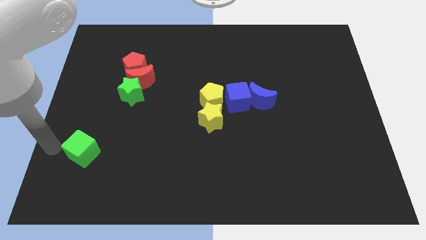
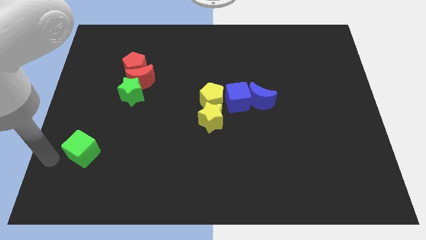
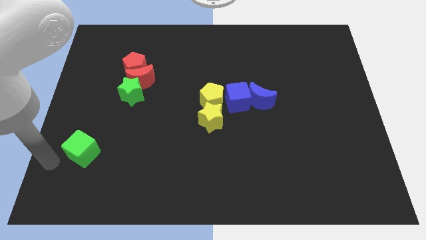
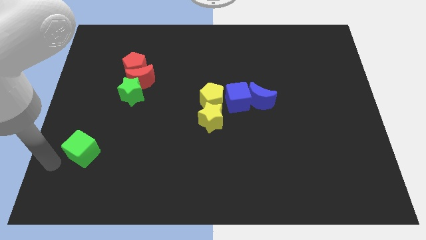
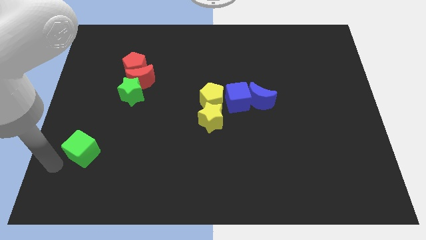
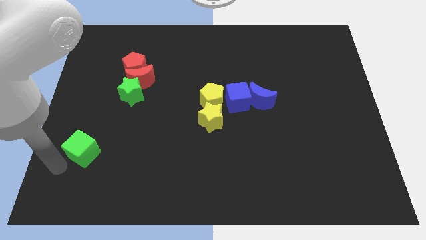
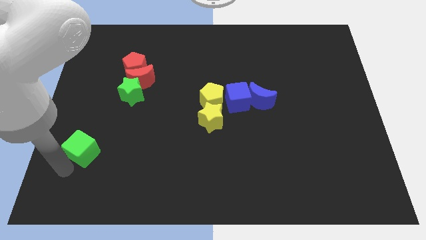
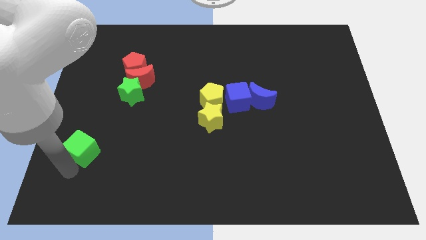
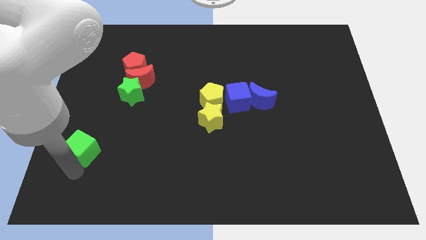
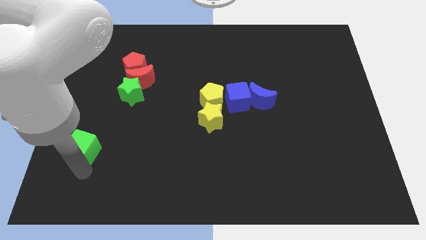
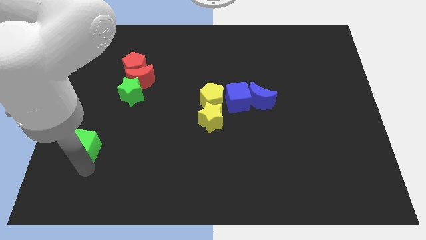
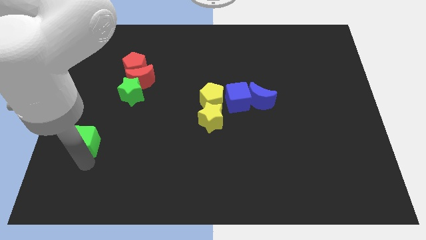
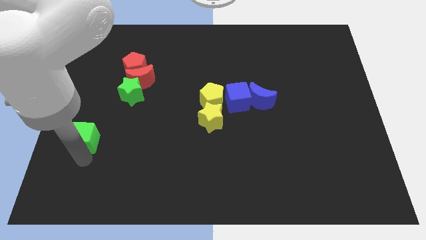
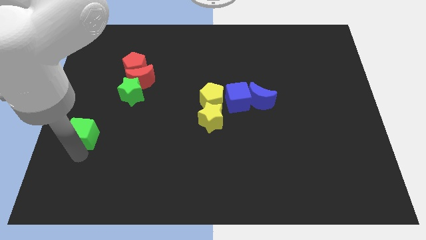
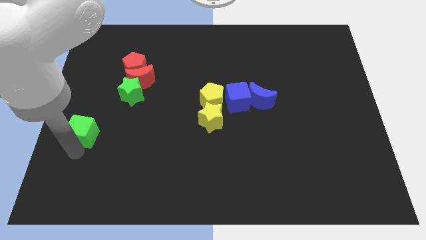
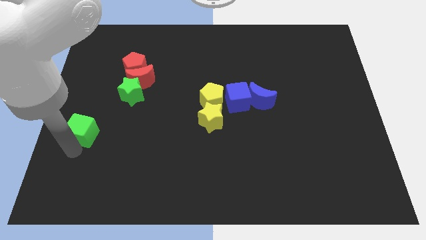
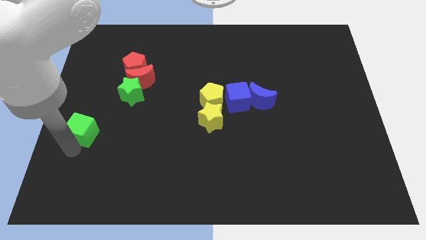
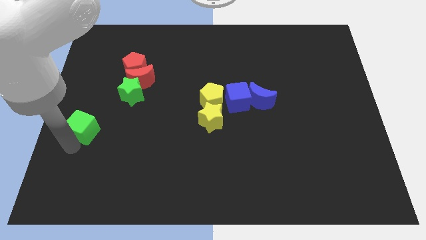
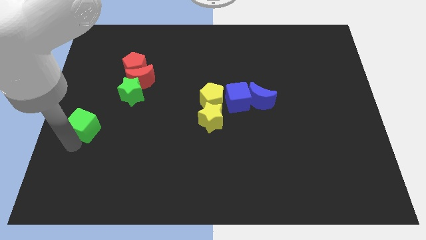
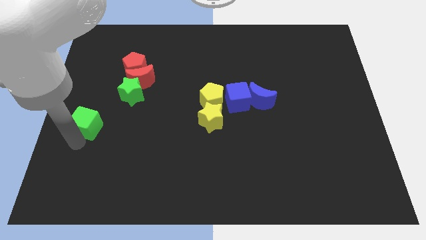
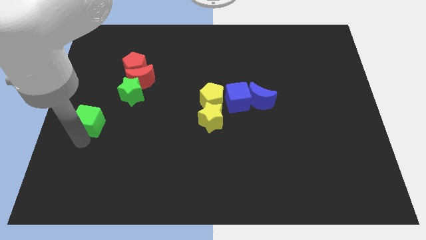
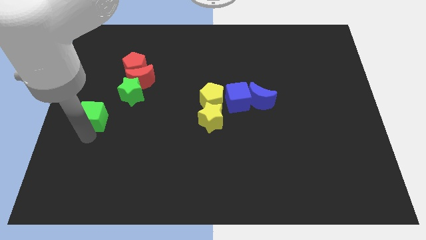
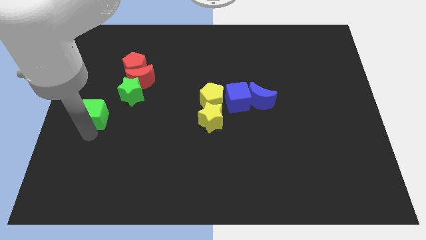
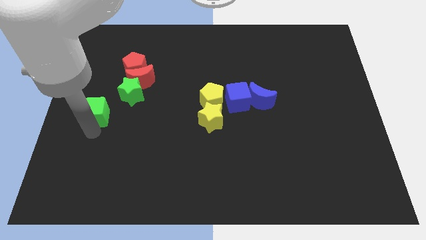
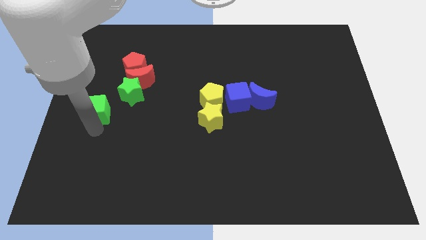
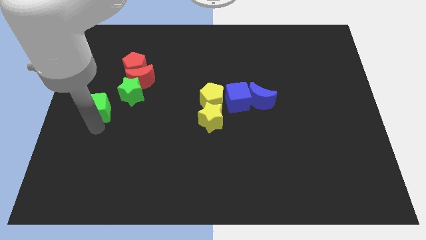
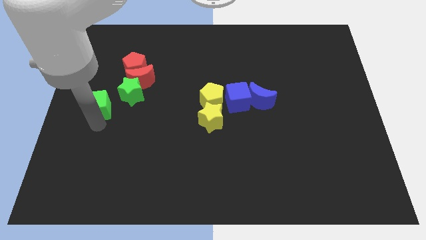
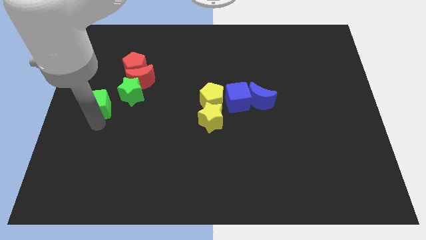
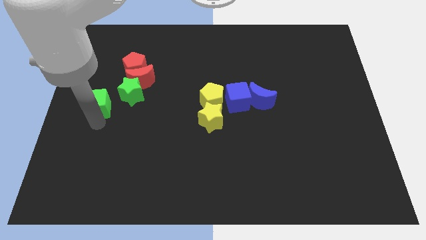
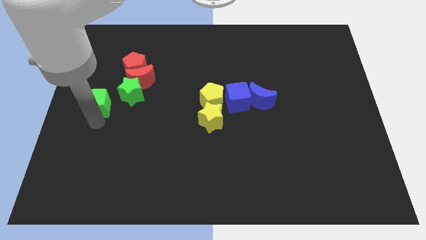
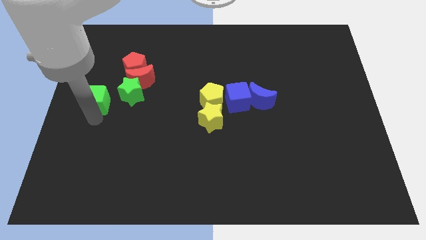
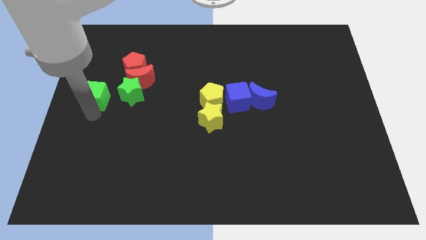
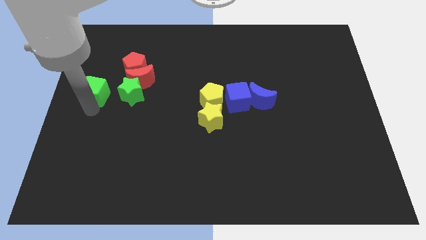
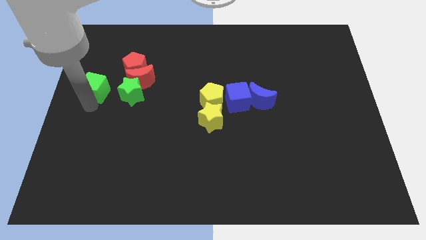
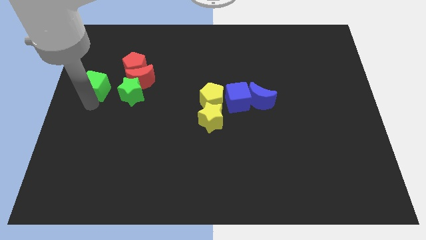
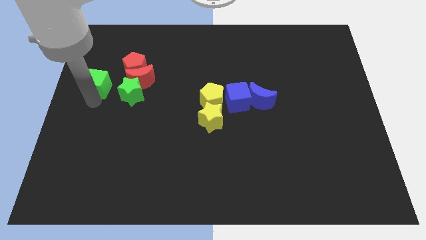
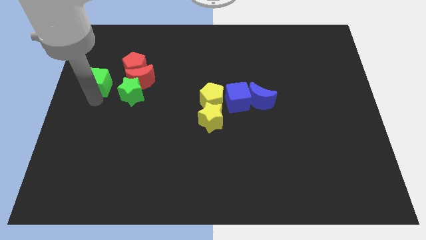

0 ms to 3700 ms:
place the green cube to the left of the green star

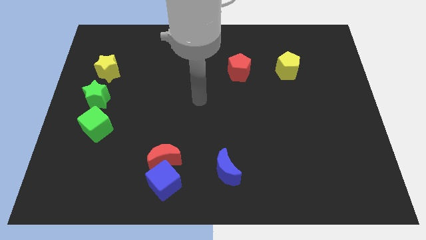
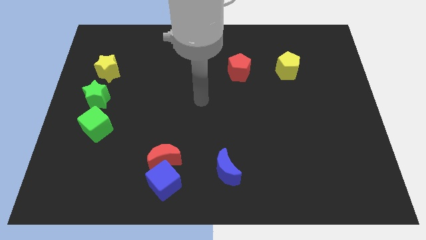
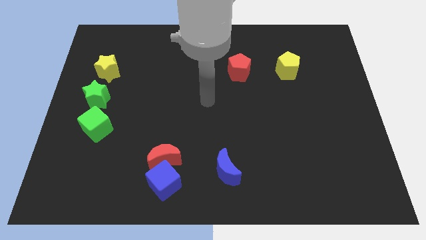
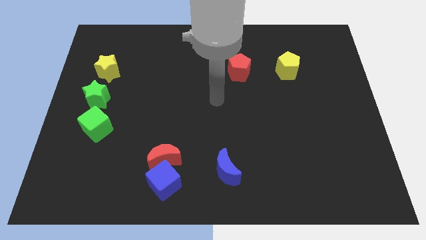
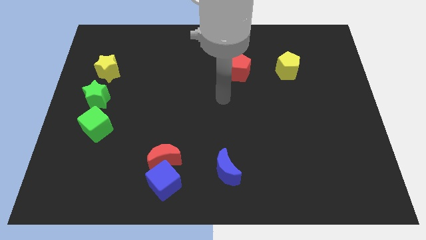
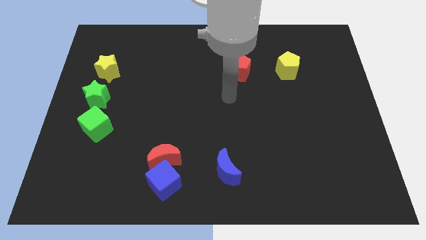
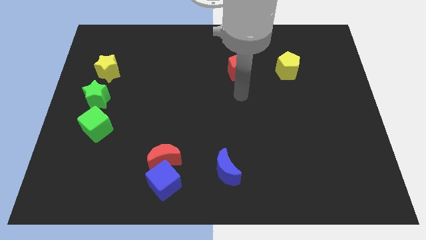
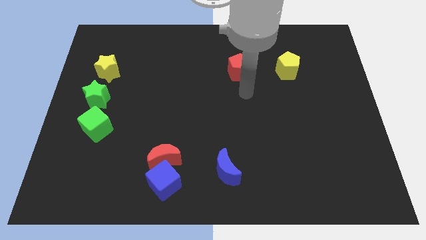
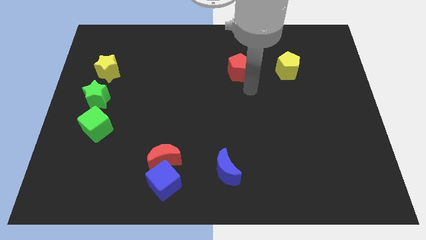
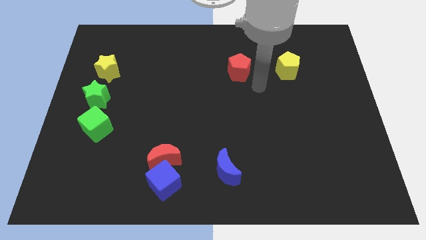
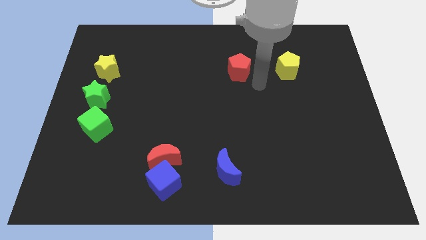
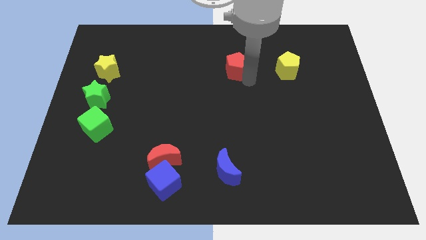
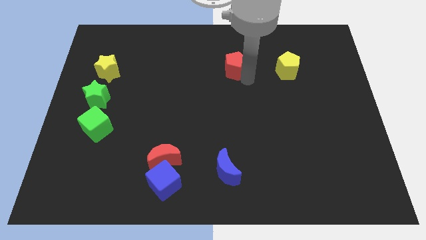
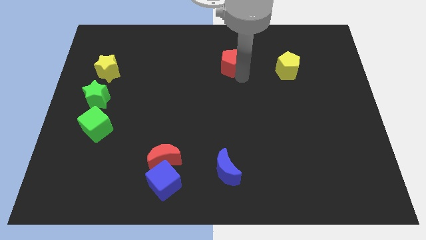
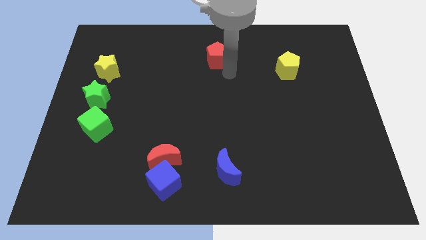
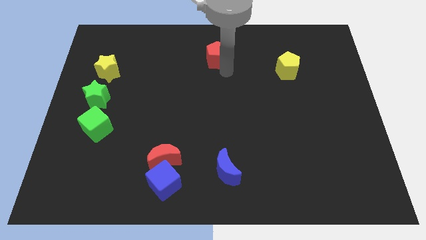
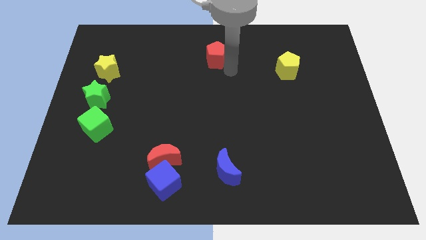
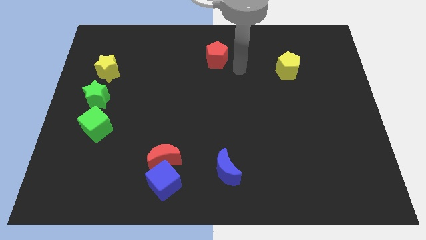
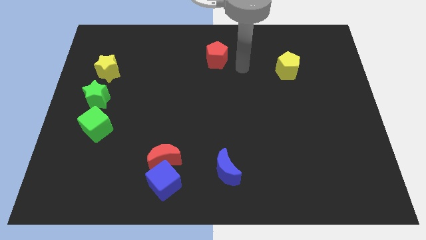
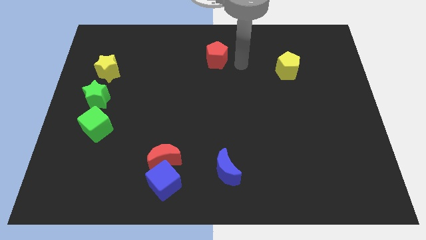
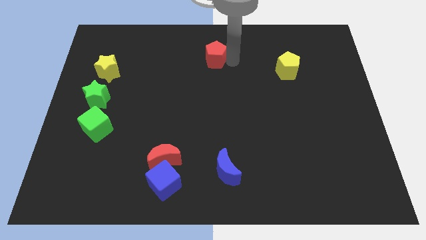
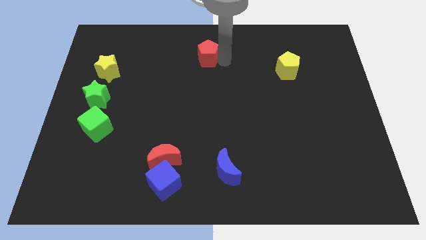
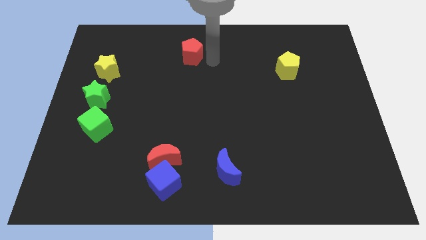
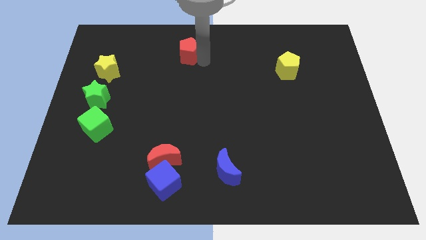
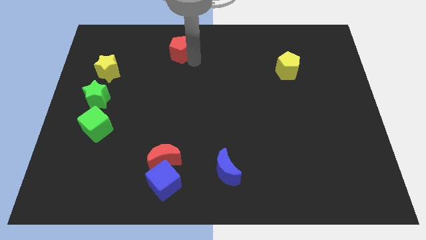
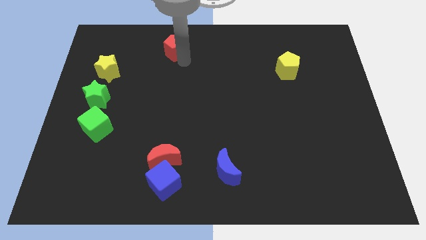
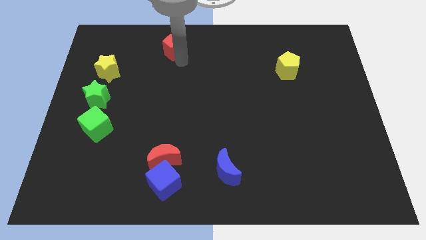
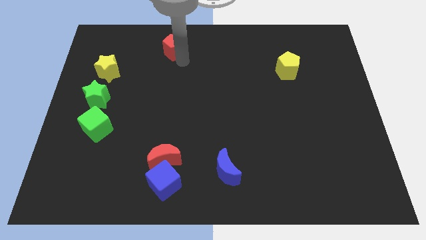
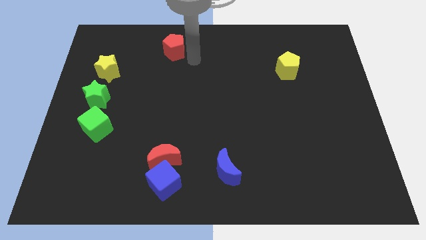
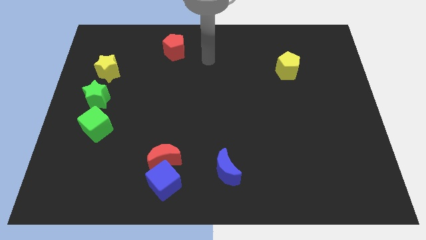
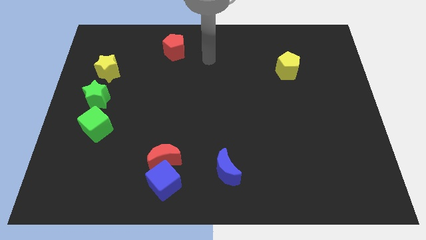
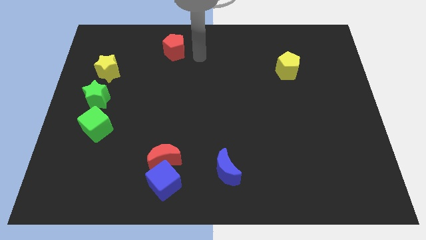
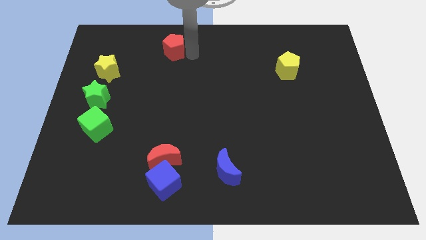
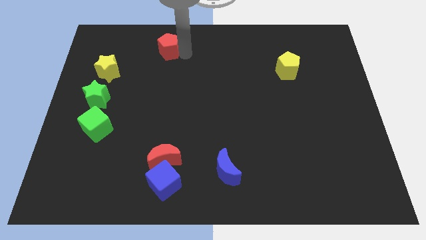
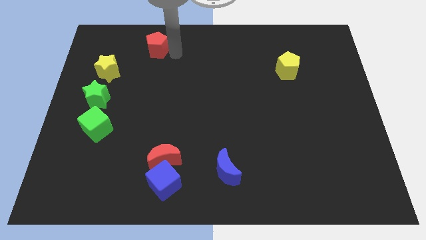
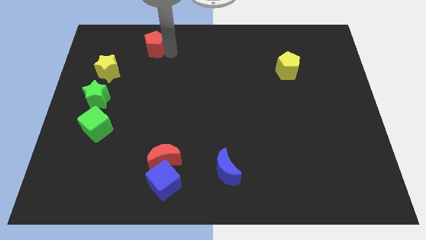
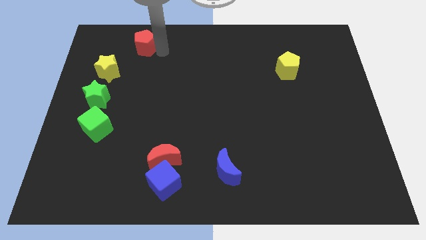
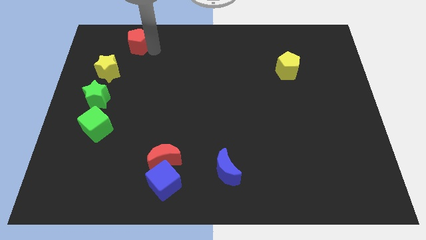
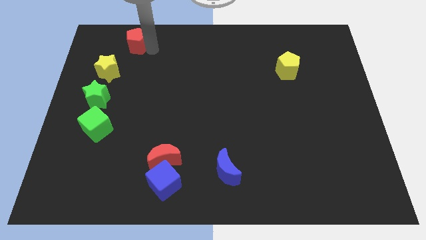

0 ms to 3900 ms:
push the red pentagon towards the left side of the board

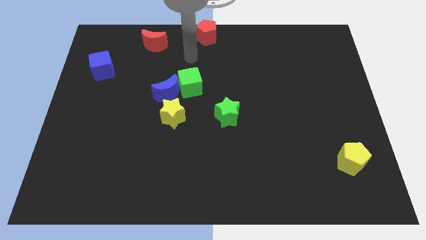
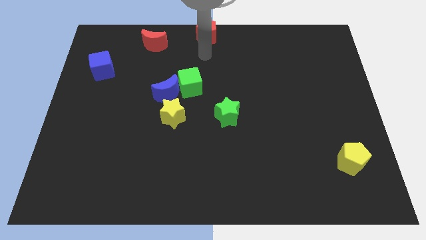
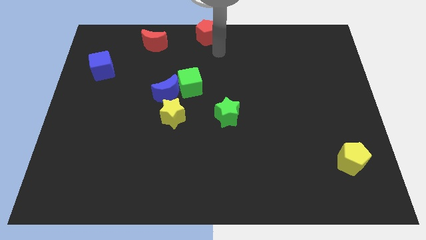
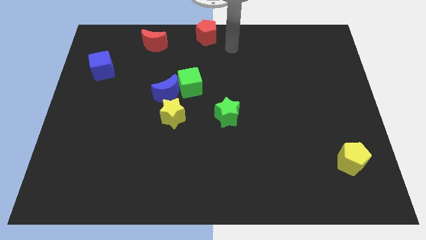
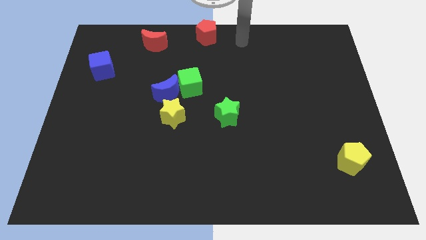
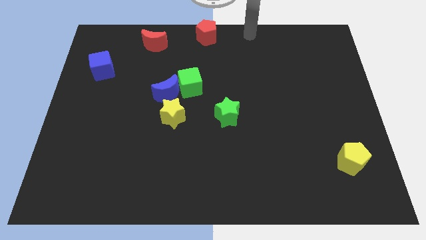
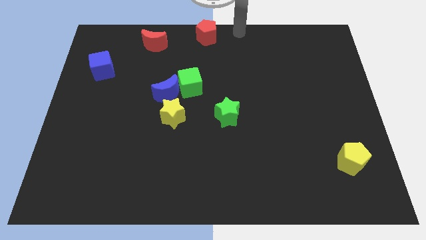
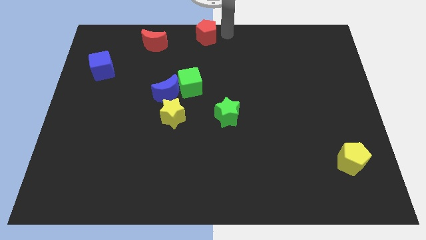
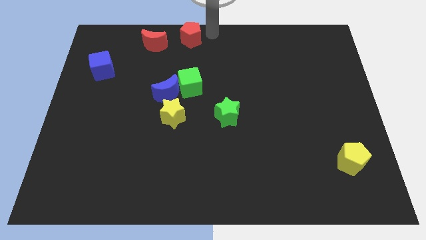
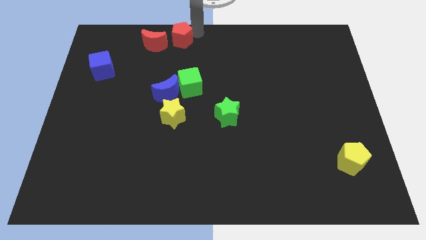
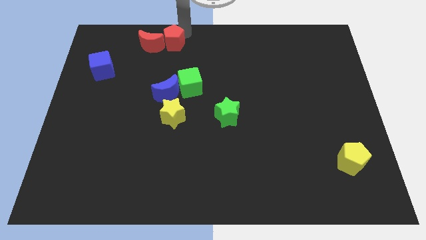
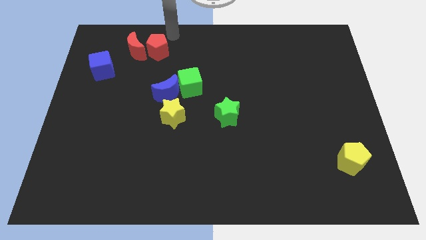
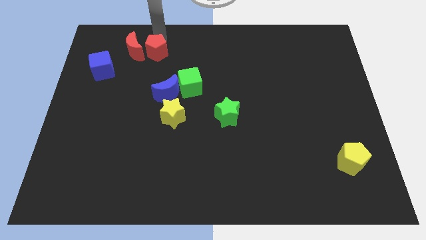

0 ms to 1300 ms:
push red pentagon into red crescent
